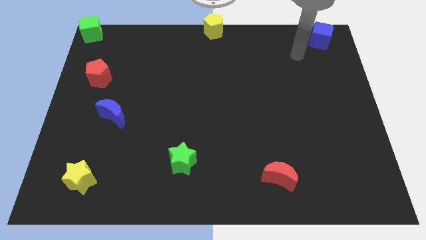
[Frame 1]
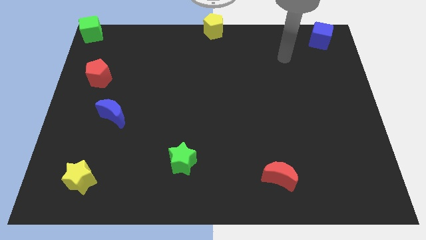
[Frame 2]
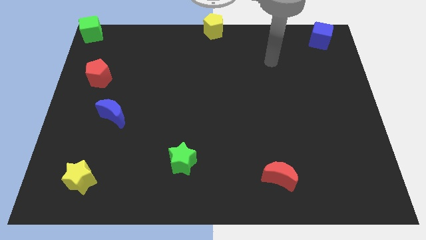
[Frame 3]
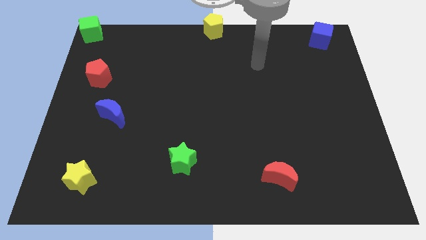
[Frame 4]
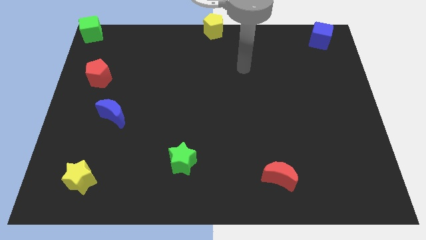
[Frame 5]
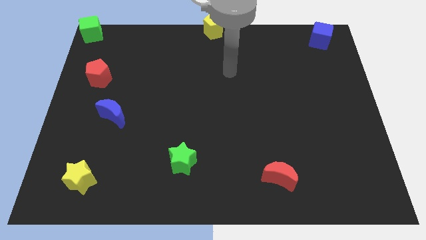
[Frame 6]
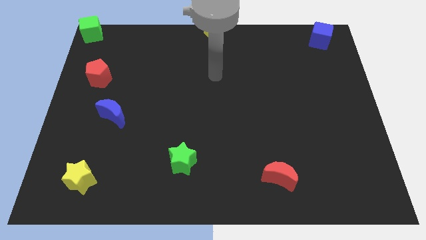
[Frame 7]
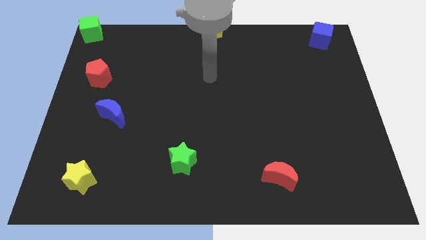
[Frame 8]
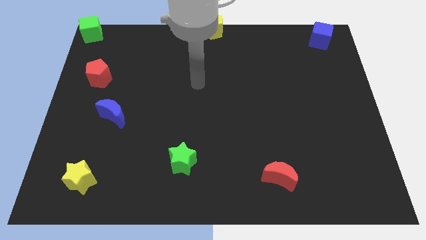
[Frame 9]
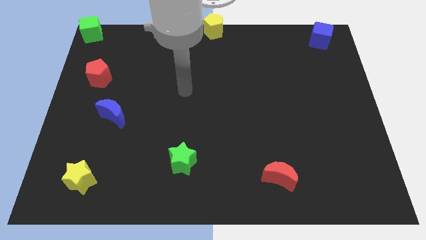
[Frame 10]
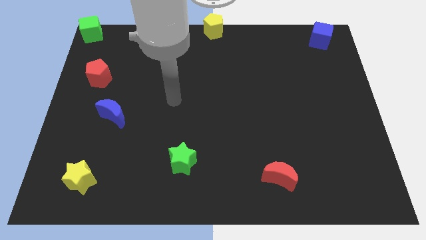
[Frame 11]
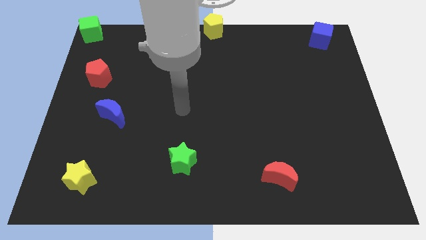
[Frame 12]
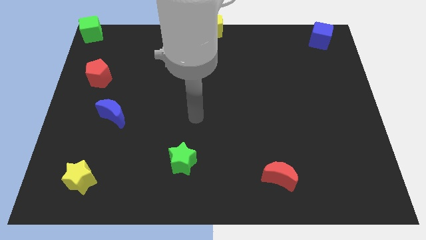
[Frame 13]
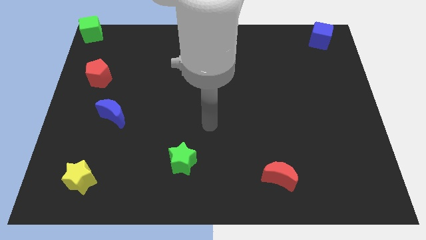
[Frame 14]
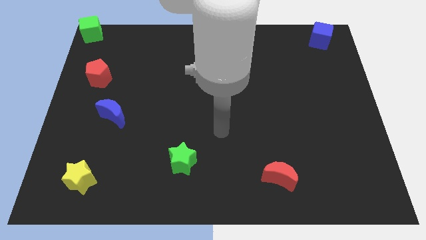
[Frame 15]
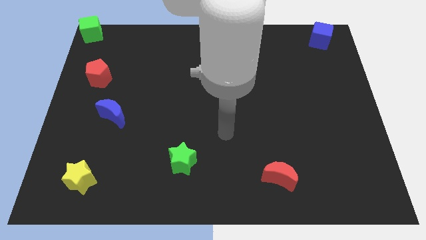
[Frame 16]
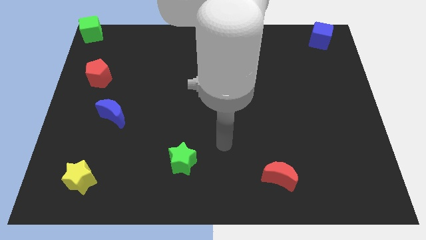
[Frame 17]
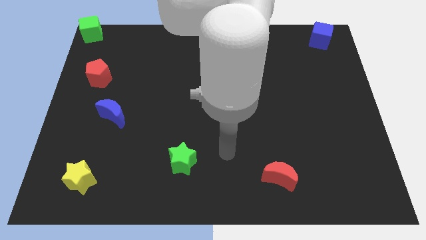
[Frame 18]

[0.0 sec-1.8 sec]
move the arm to the right side of the green star

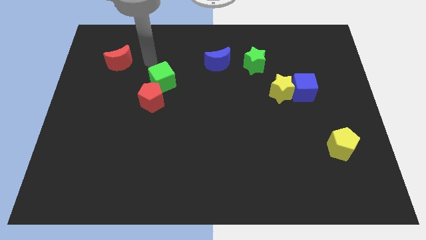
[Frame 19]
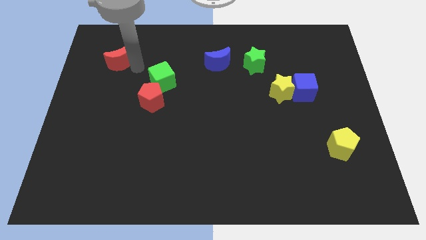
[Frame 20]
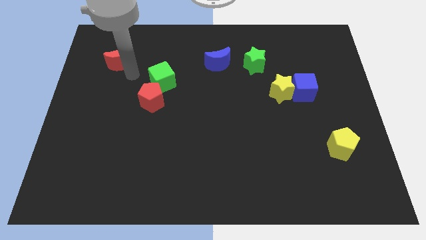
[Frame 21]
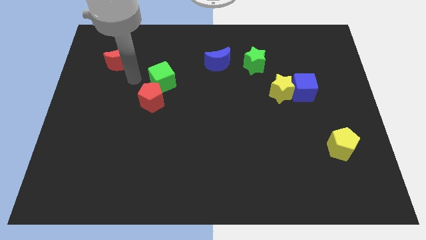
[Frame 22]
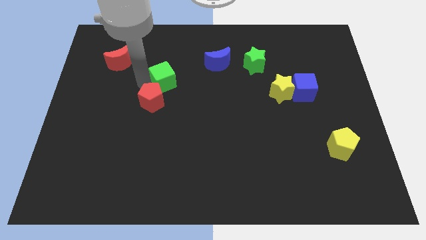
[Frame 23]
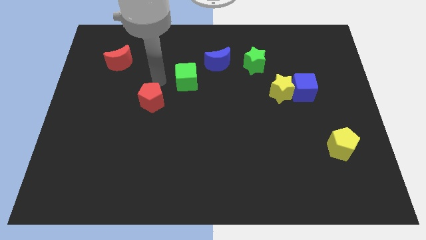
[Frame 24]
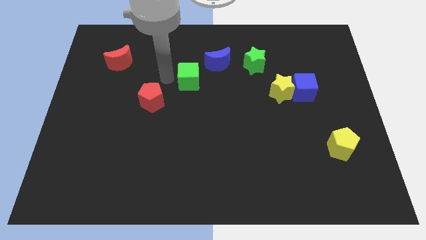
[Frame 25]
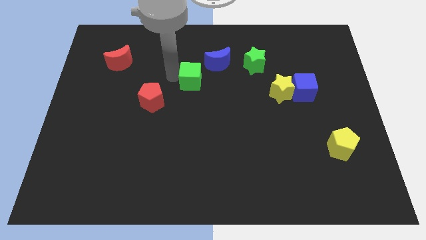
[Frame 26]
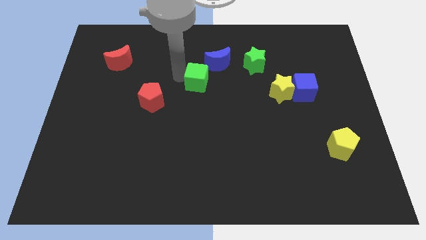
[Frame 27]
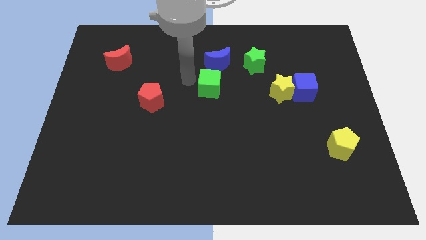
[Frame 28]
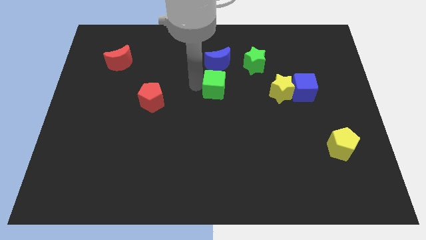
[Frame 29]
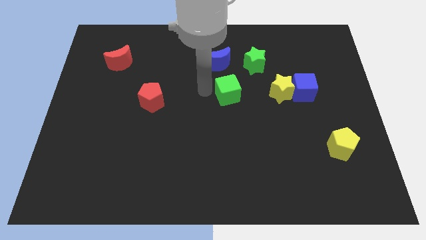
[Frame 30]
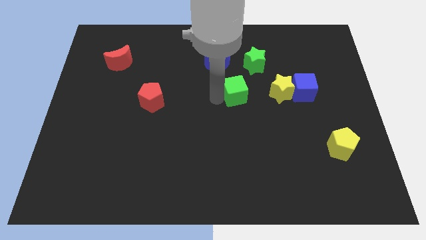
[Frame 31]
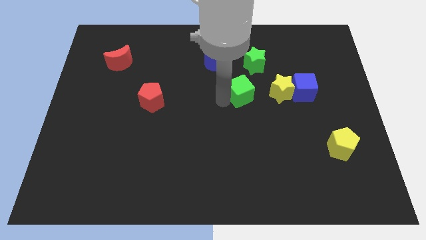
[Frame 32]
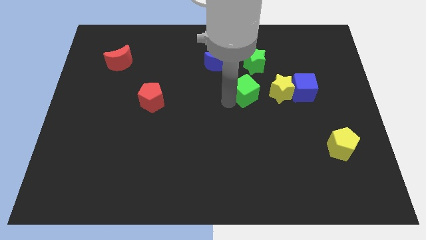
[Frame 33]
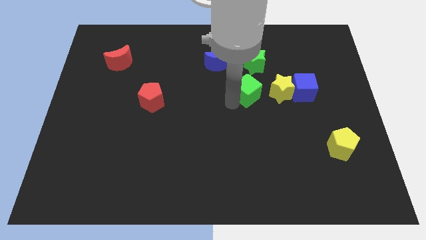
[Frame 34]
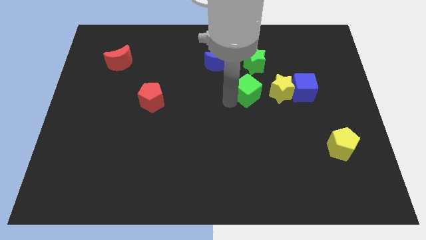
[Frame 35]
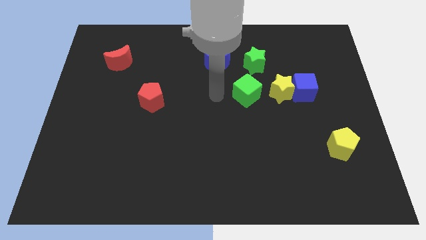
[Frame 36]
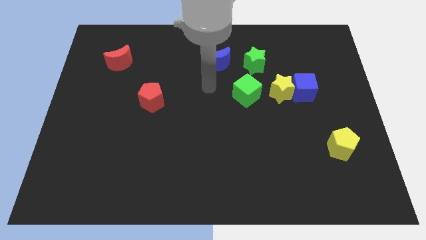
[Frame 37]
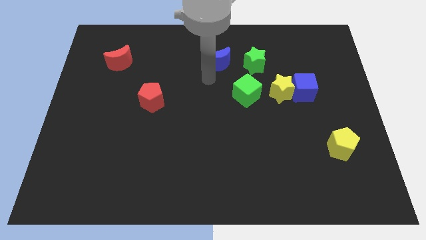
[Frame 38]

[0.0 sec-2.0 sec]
put the green cube left to the yellow star

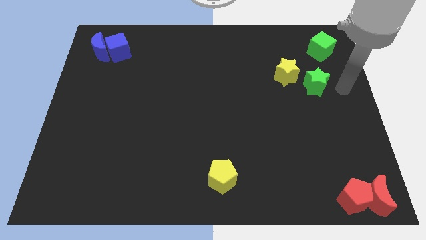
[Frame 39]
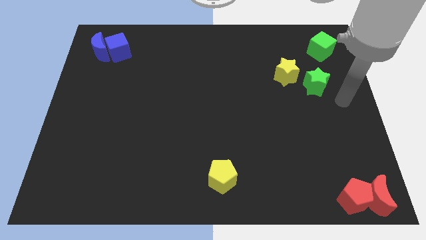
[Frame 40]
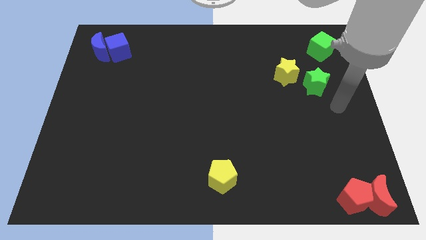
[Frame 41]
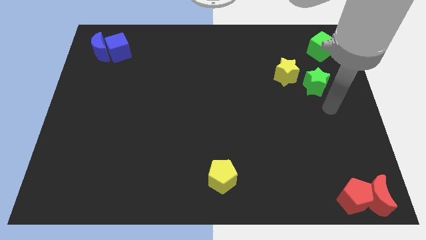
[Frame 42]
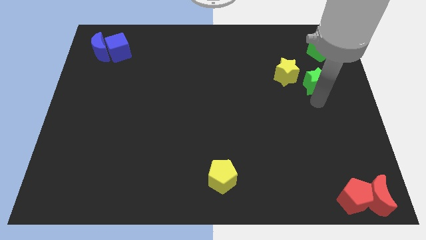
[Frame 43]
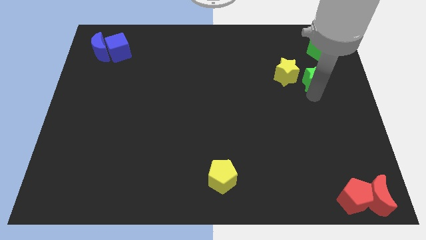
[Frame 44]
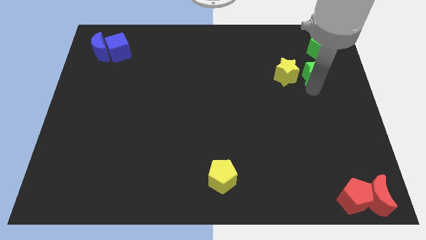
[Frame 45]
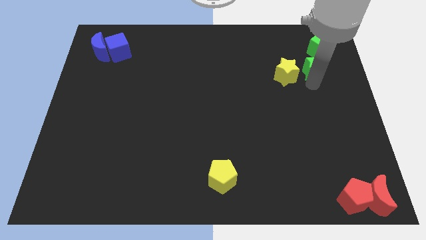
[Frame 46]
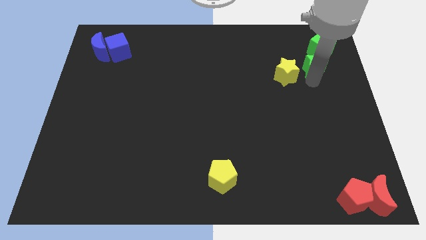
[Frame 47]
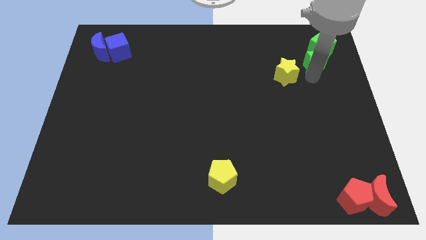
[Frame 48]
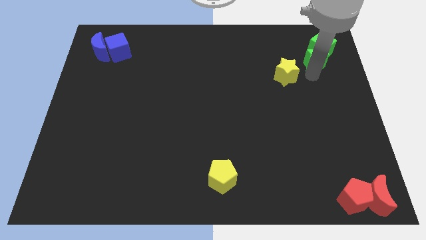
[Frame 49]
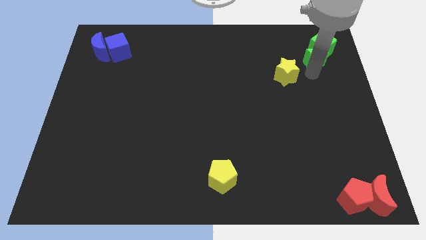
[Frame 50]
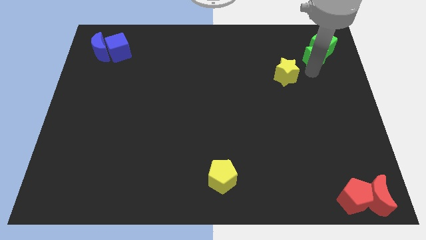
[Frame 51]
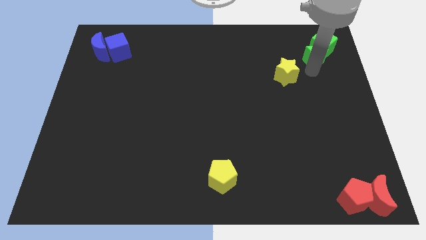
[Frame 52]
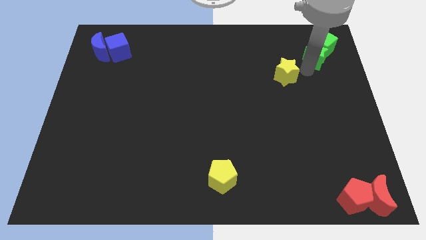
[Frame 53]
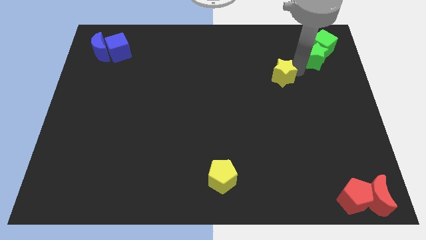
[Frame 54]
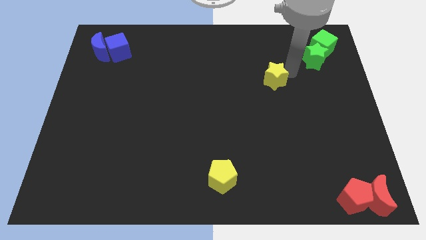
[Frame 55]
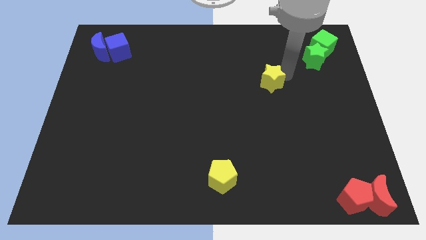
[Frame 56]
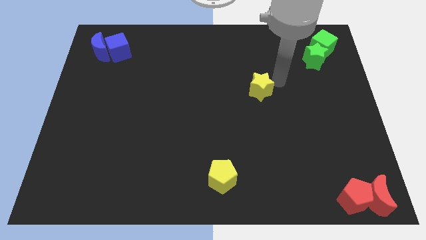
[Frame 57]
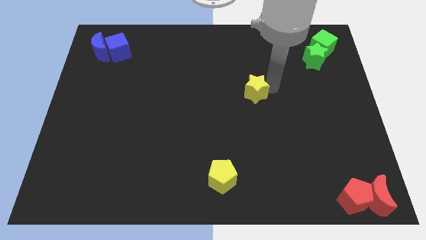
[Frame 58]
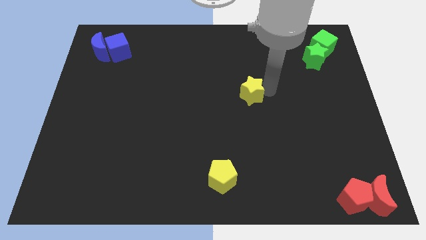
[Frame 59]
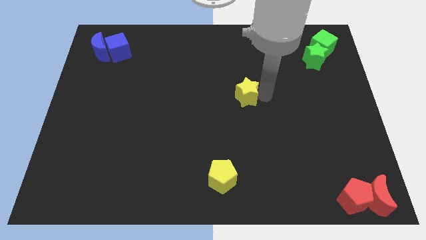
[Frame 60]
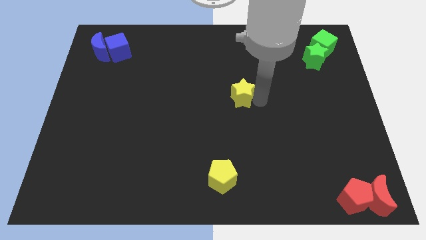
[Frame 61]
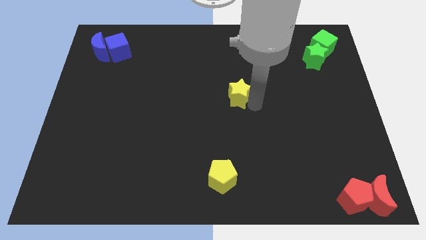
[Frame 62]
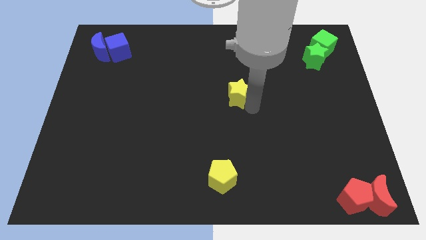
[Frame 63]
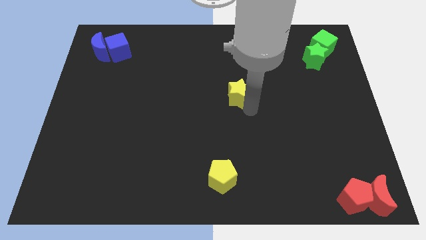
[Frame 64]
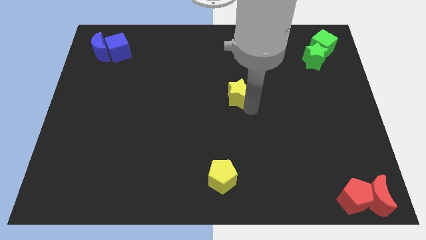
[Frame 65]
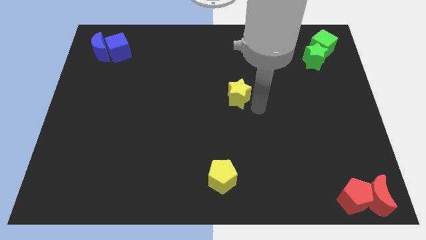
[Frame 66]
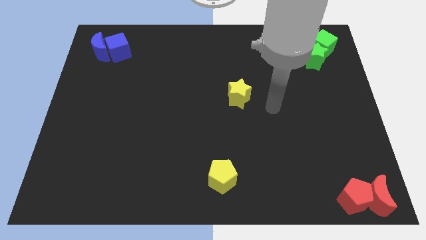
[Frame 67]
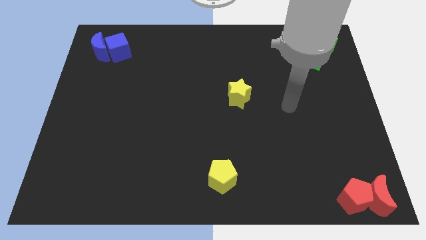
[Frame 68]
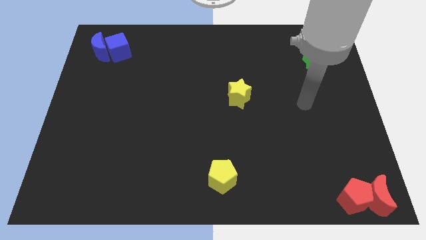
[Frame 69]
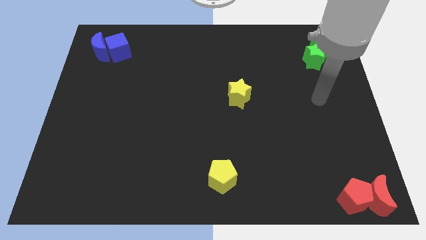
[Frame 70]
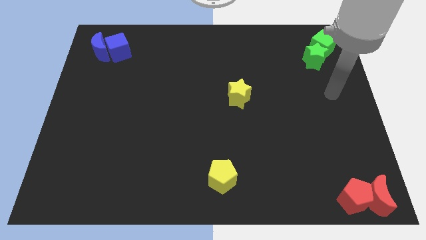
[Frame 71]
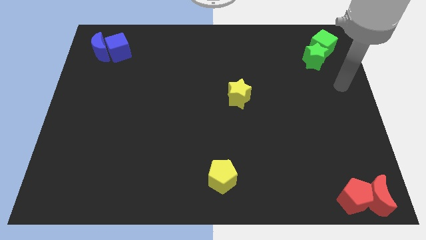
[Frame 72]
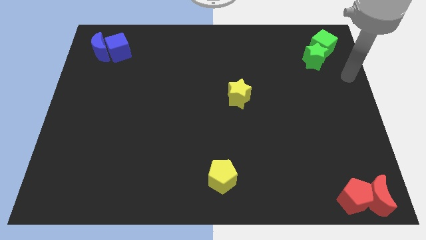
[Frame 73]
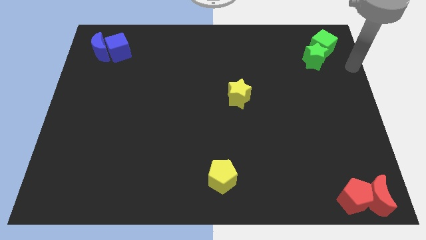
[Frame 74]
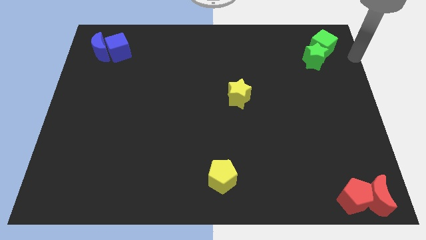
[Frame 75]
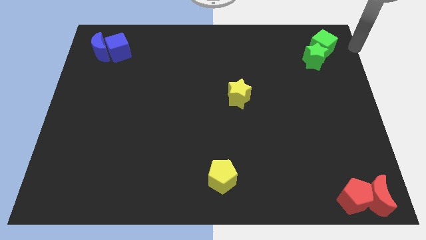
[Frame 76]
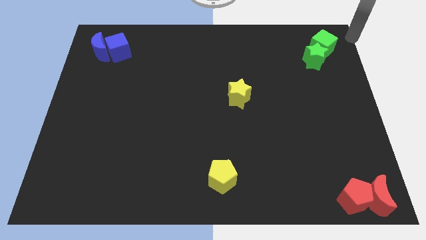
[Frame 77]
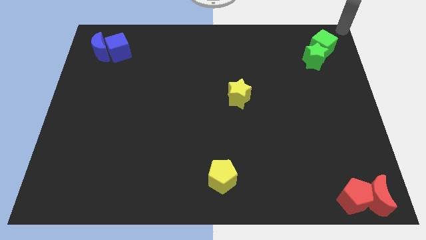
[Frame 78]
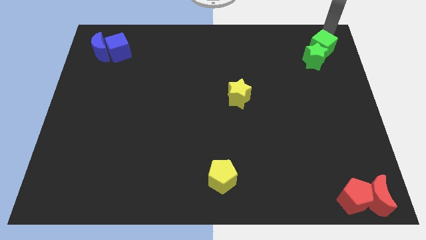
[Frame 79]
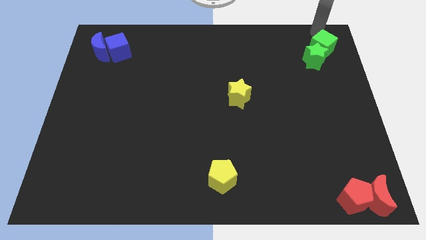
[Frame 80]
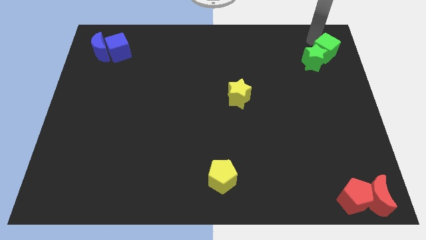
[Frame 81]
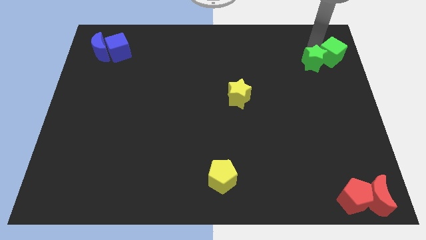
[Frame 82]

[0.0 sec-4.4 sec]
separate the yellow star and the green blocks

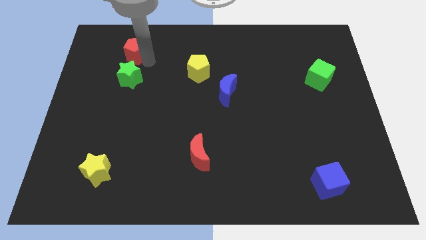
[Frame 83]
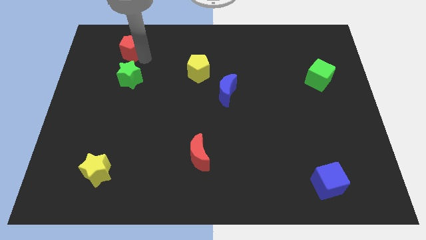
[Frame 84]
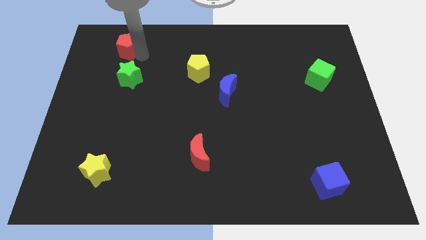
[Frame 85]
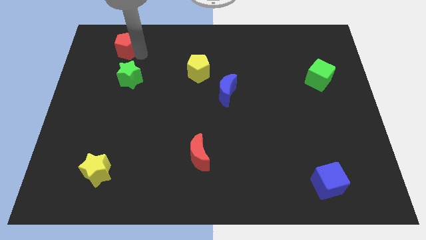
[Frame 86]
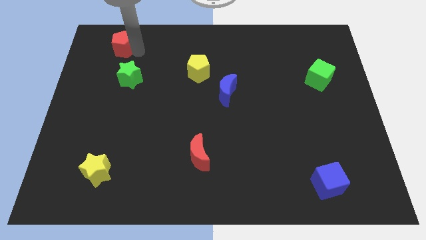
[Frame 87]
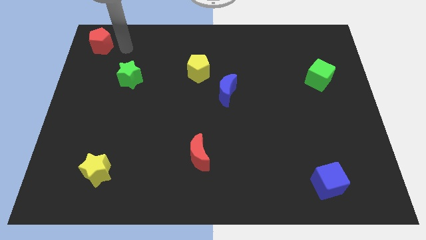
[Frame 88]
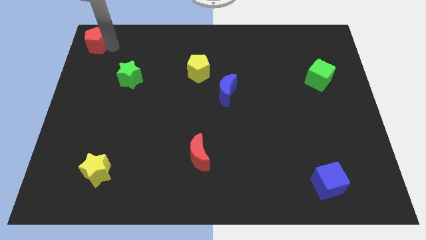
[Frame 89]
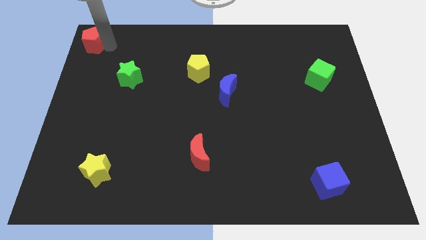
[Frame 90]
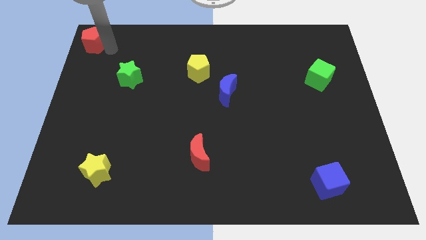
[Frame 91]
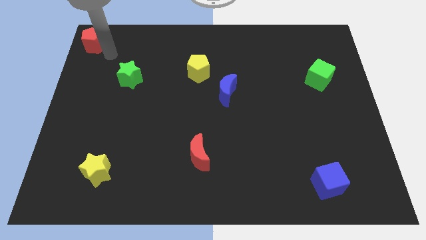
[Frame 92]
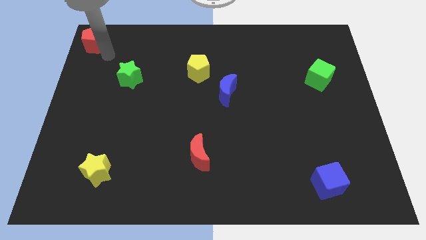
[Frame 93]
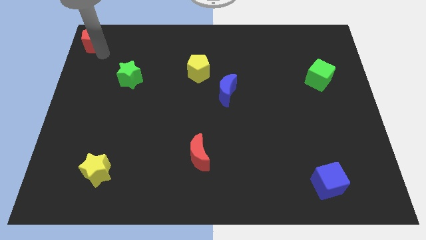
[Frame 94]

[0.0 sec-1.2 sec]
place the red pentagon at the top left corner
